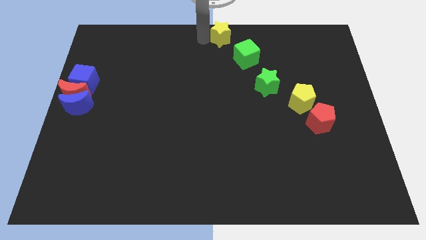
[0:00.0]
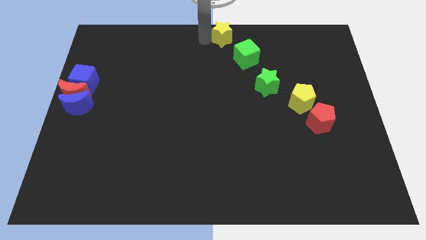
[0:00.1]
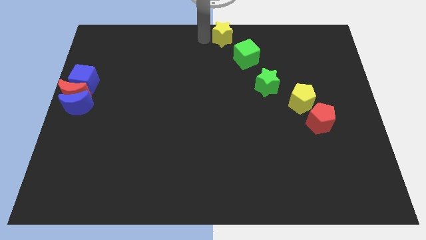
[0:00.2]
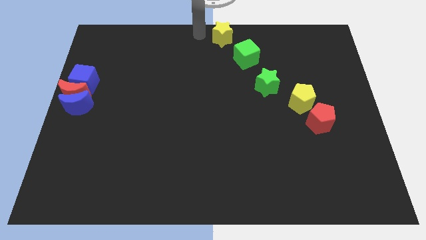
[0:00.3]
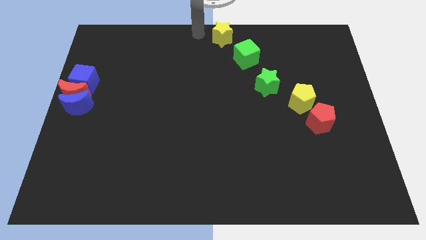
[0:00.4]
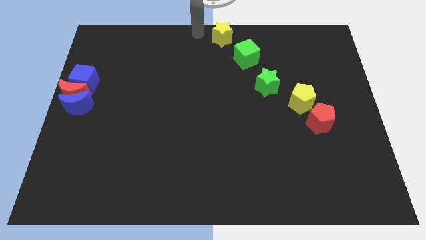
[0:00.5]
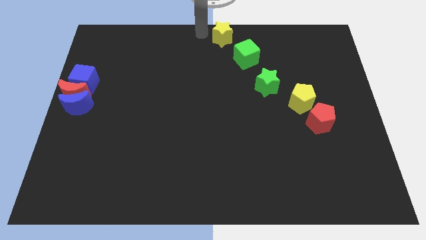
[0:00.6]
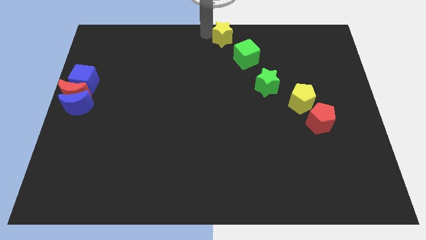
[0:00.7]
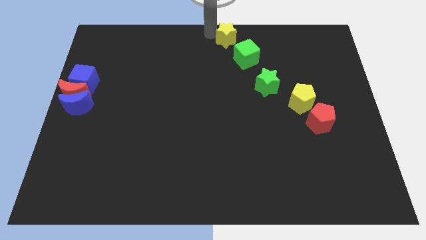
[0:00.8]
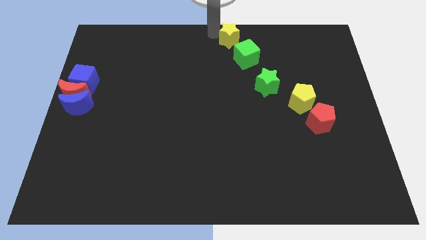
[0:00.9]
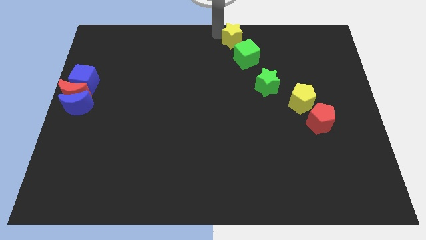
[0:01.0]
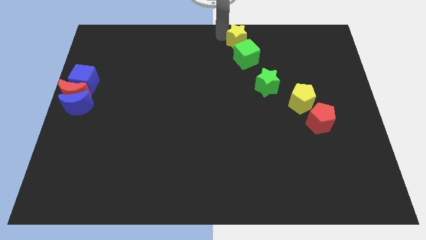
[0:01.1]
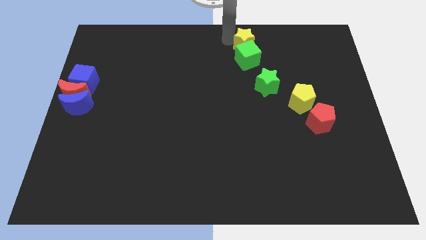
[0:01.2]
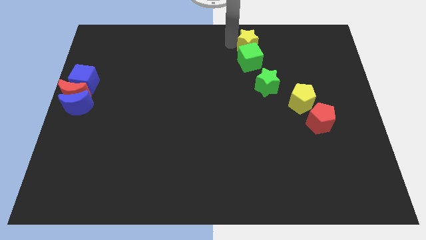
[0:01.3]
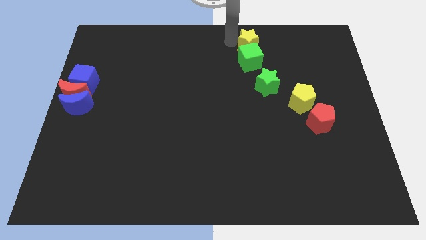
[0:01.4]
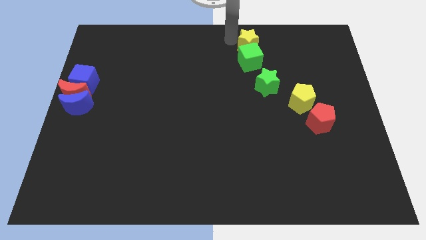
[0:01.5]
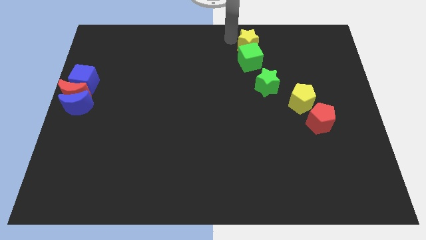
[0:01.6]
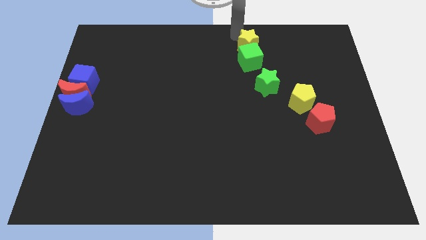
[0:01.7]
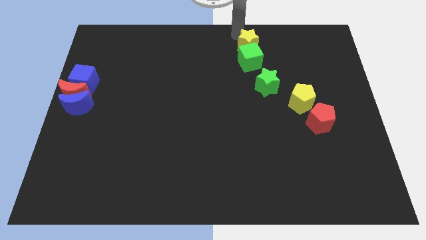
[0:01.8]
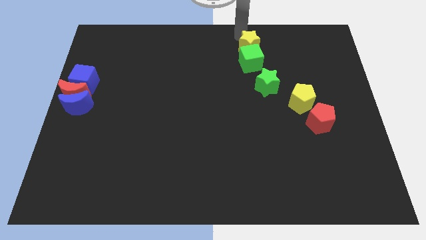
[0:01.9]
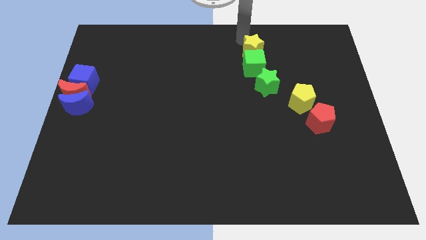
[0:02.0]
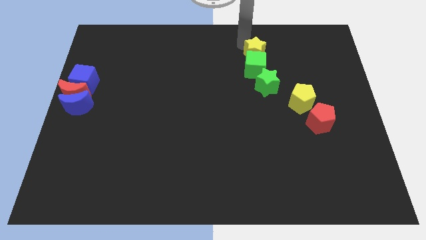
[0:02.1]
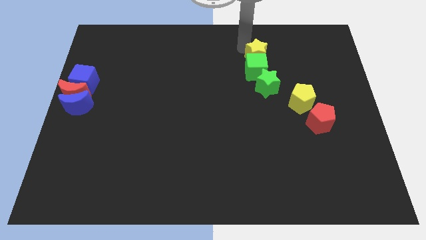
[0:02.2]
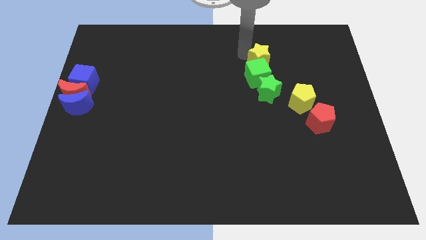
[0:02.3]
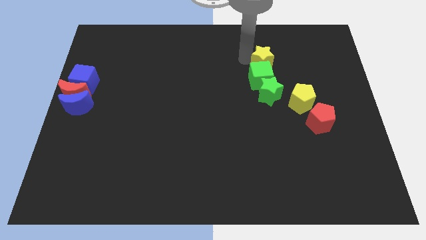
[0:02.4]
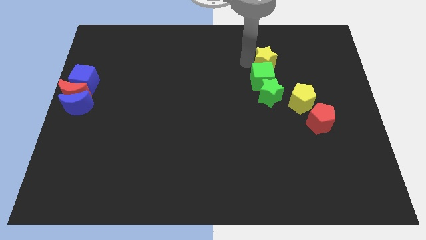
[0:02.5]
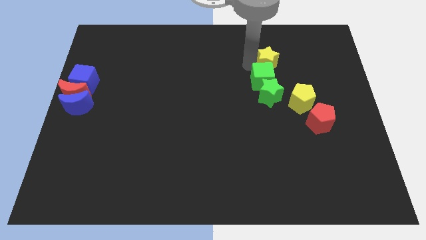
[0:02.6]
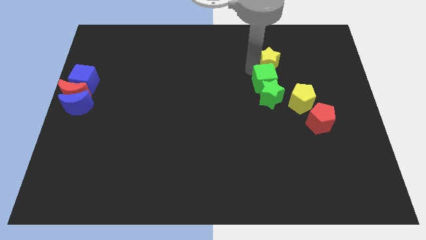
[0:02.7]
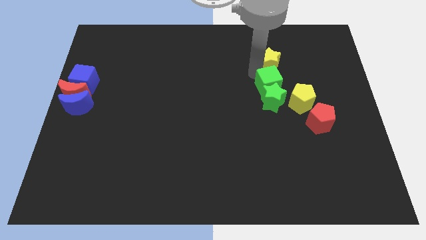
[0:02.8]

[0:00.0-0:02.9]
push the yellow star into the green cube

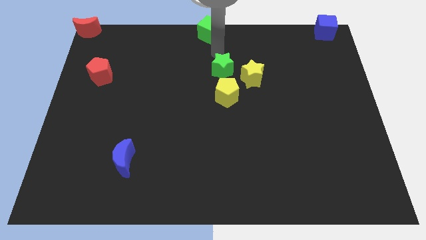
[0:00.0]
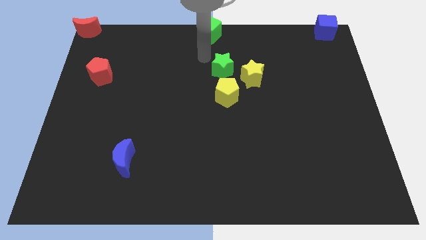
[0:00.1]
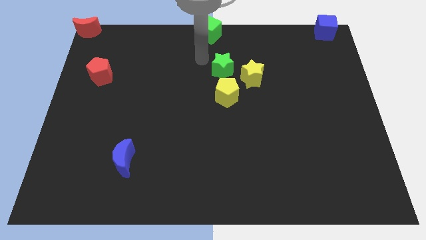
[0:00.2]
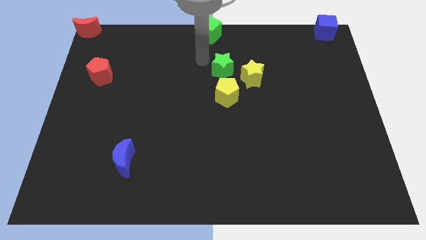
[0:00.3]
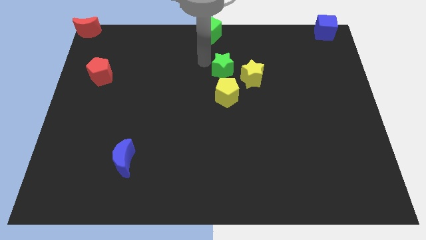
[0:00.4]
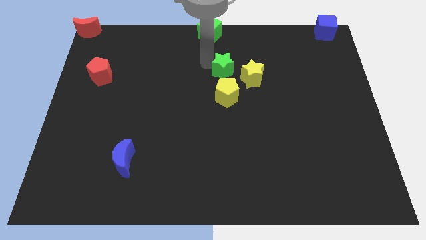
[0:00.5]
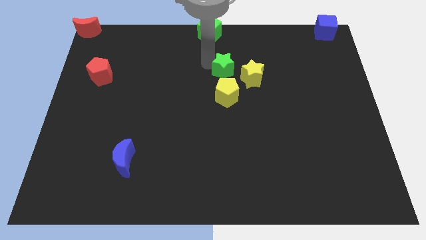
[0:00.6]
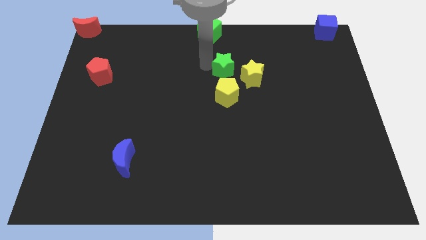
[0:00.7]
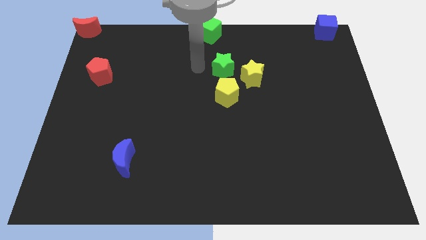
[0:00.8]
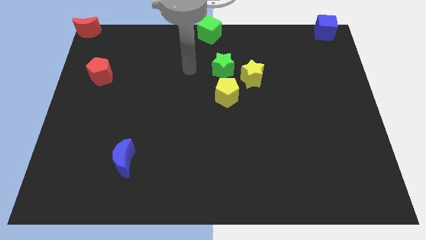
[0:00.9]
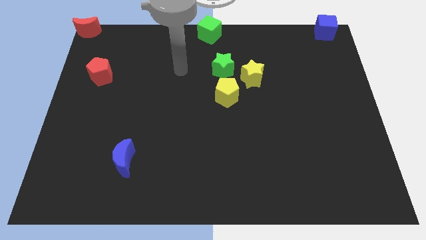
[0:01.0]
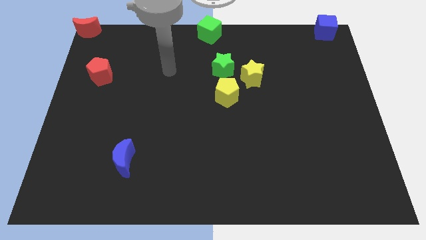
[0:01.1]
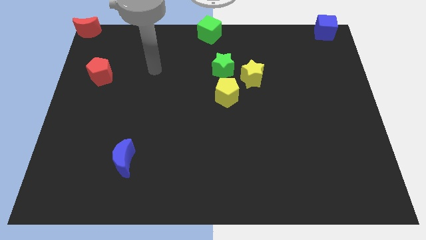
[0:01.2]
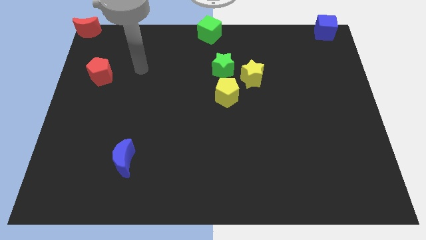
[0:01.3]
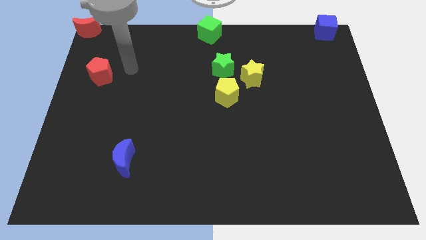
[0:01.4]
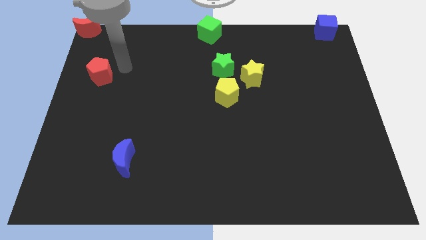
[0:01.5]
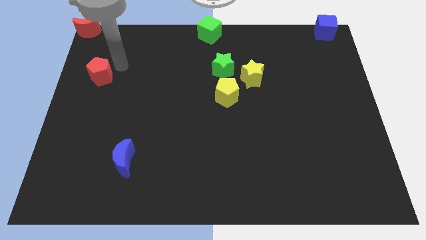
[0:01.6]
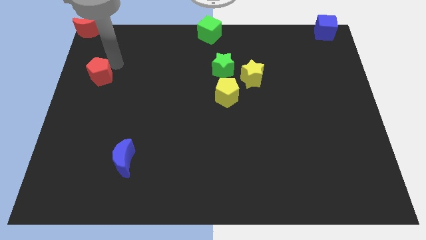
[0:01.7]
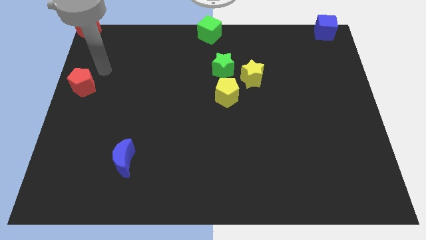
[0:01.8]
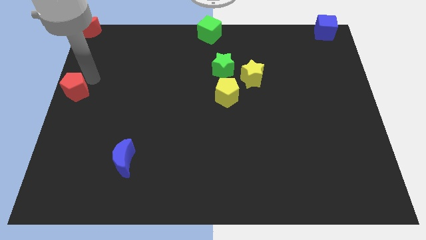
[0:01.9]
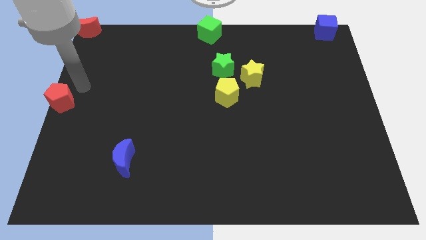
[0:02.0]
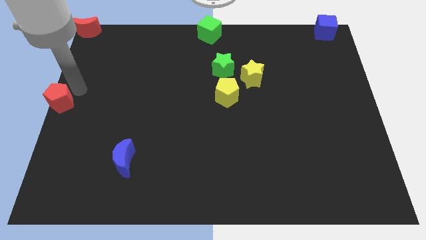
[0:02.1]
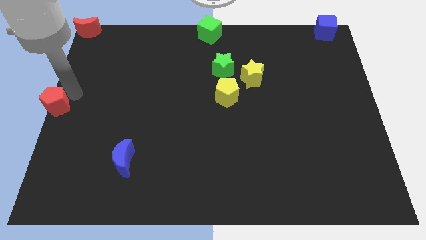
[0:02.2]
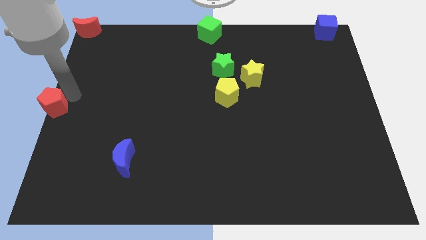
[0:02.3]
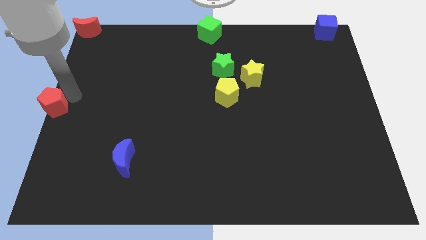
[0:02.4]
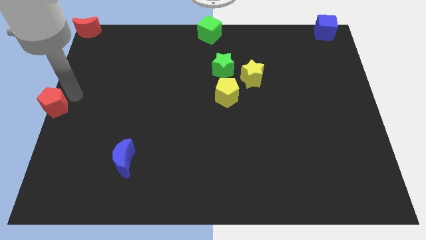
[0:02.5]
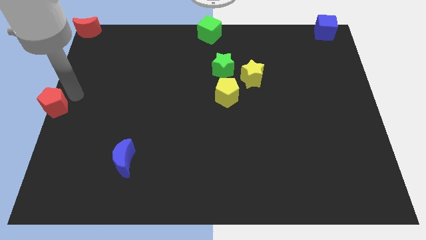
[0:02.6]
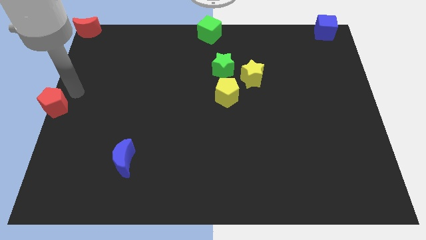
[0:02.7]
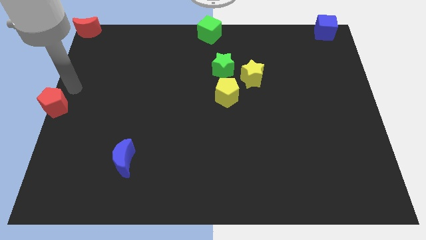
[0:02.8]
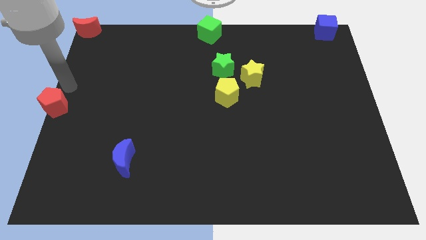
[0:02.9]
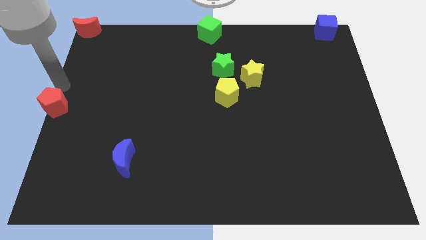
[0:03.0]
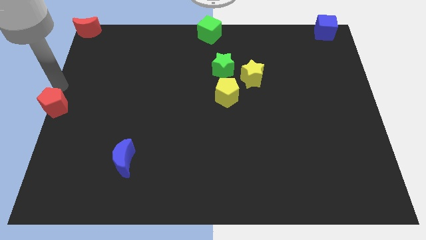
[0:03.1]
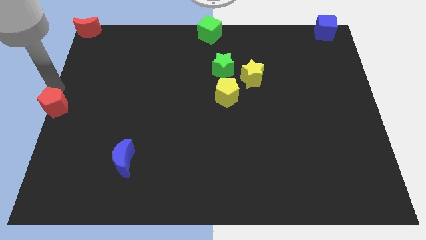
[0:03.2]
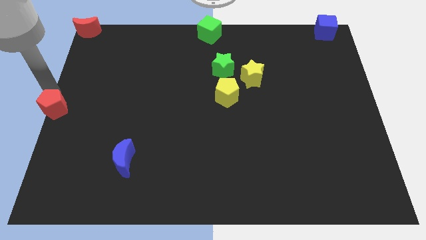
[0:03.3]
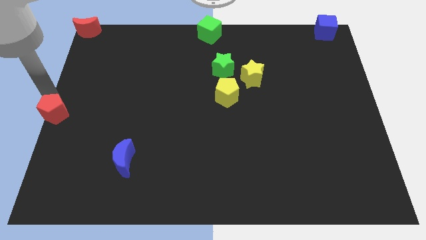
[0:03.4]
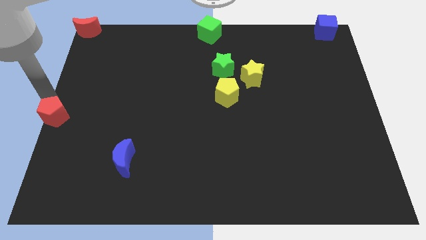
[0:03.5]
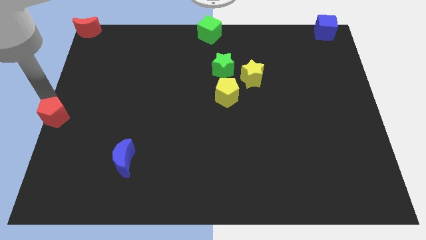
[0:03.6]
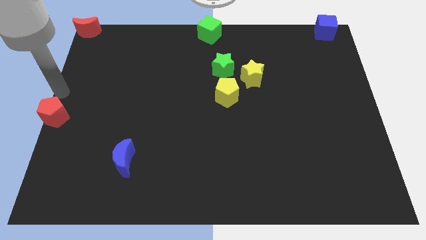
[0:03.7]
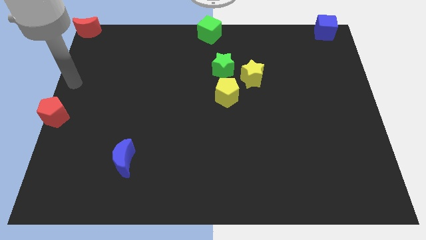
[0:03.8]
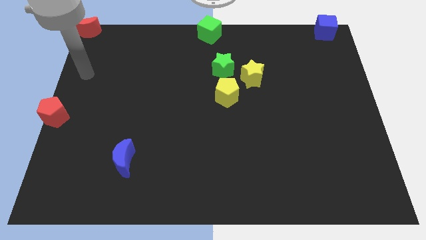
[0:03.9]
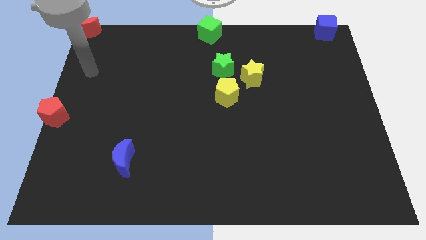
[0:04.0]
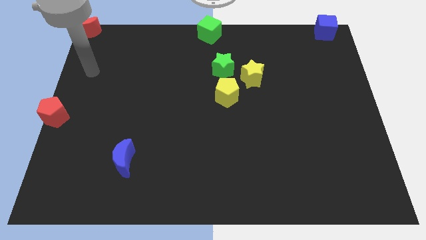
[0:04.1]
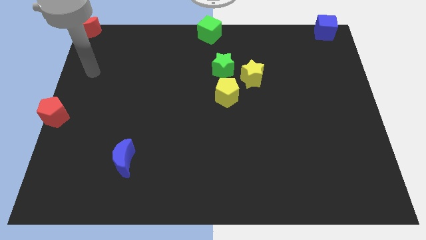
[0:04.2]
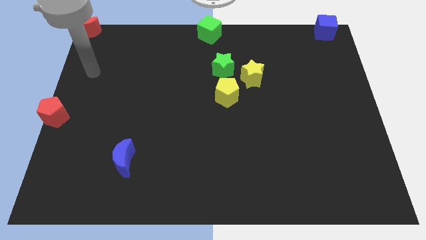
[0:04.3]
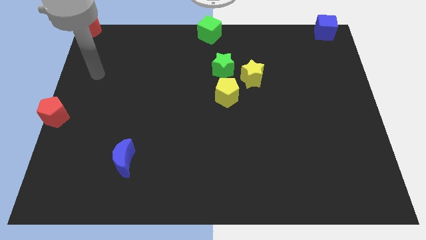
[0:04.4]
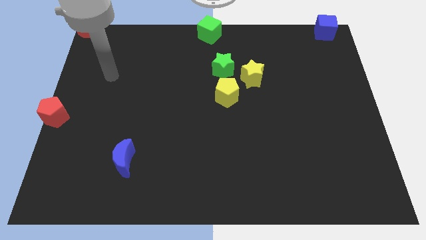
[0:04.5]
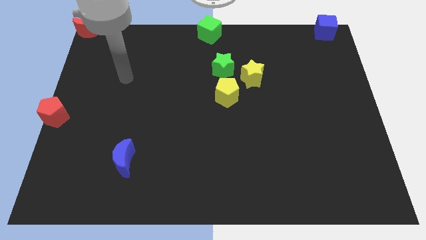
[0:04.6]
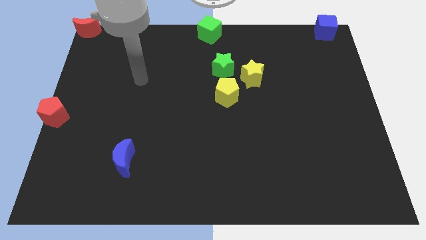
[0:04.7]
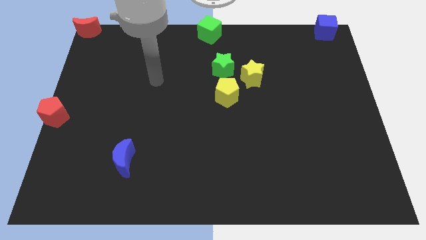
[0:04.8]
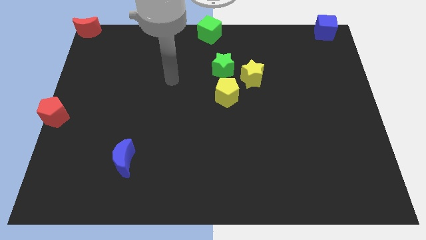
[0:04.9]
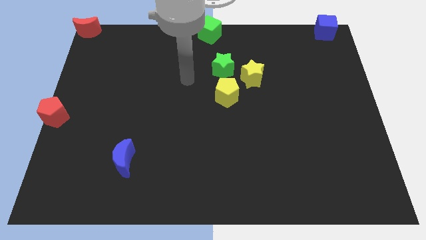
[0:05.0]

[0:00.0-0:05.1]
push the red pentagon to the left centre of the board

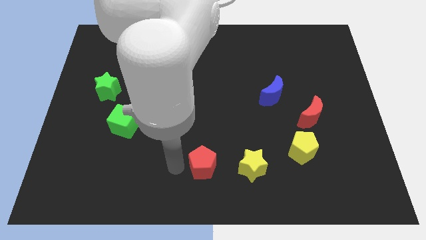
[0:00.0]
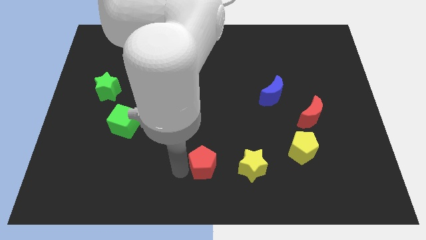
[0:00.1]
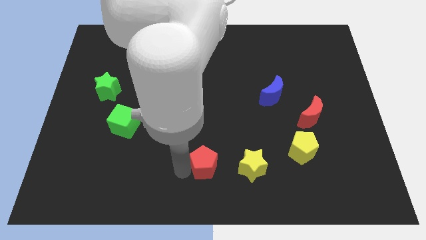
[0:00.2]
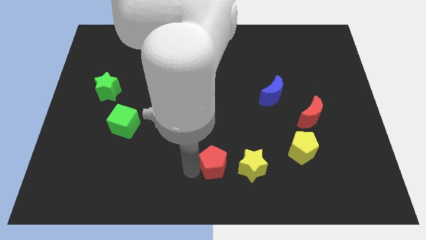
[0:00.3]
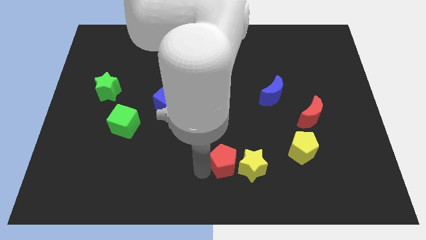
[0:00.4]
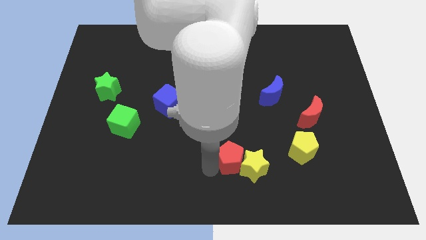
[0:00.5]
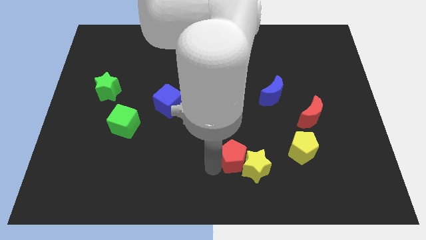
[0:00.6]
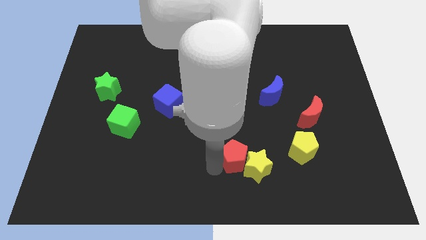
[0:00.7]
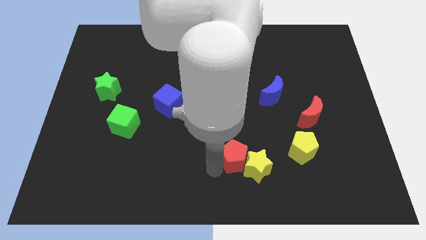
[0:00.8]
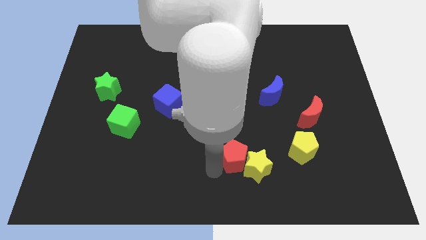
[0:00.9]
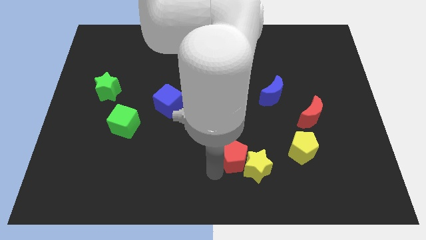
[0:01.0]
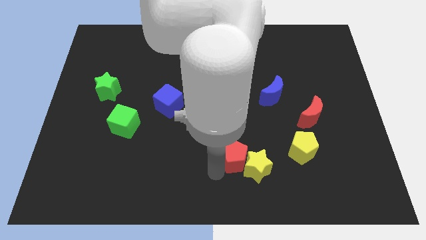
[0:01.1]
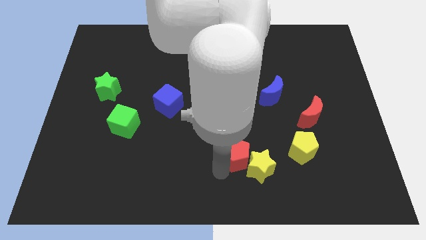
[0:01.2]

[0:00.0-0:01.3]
push the red pentagon into the yellow star
